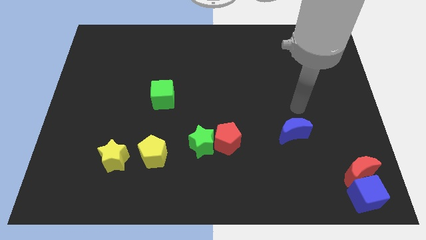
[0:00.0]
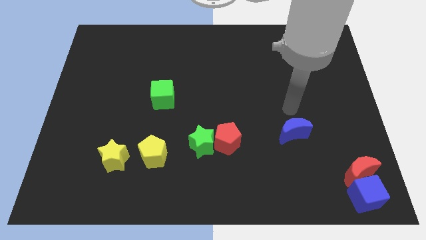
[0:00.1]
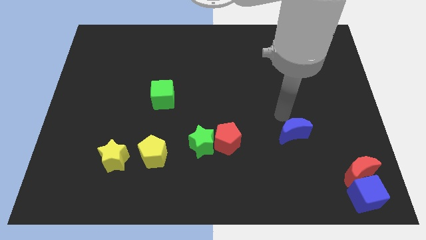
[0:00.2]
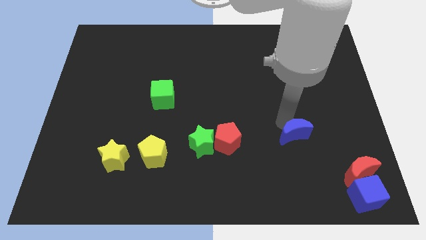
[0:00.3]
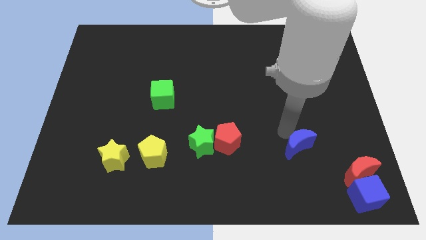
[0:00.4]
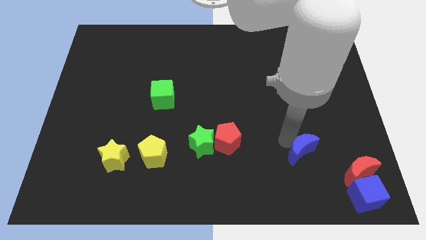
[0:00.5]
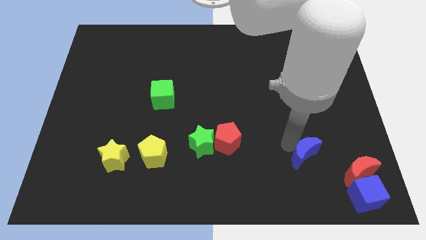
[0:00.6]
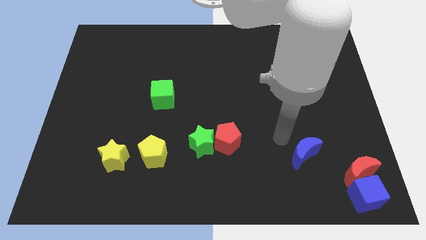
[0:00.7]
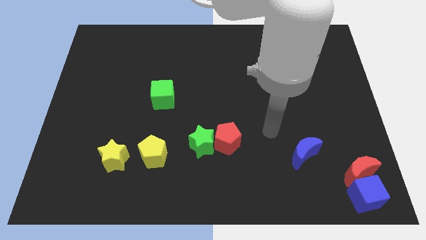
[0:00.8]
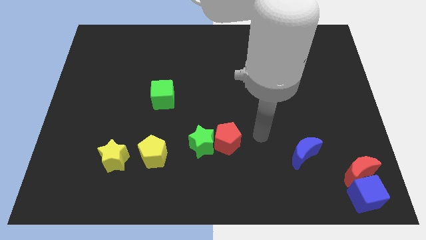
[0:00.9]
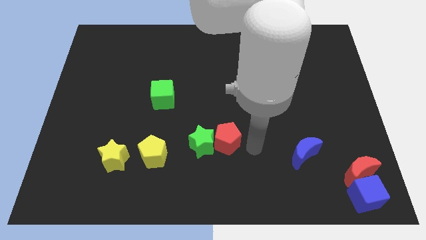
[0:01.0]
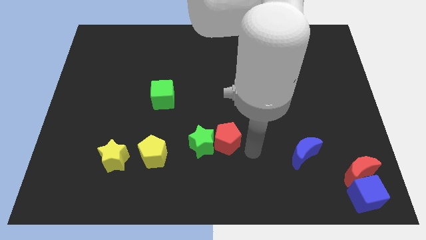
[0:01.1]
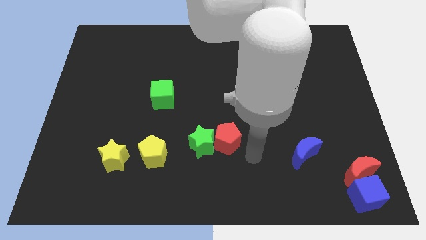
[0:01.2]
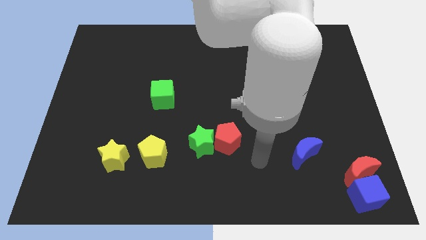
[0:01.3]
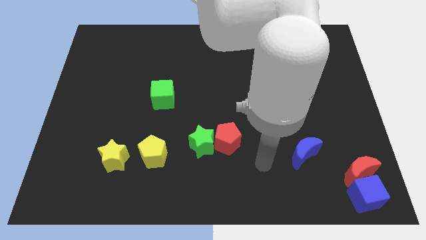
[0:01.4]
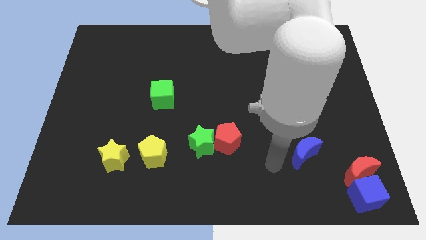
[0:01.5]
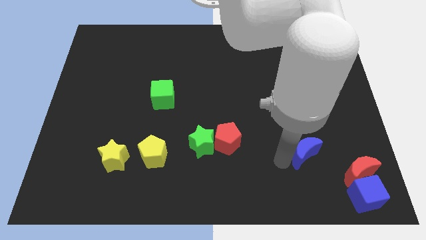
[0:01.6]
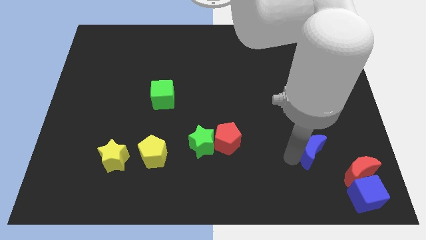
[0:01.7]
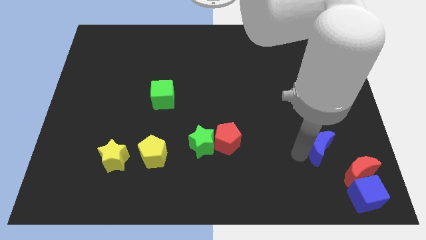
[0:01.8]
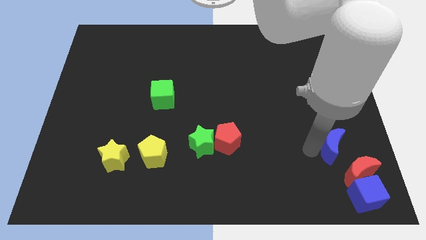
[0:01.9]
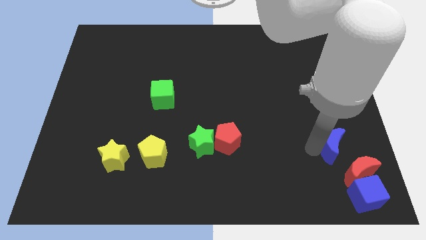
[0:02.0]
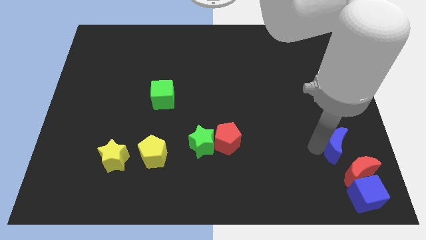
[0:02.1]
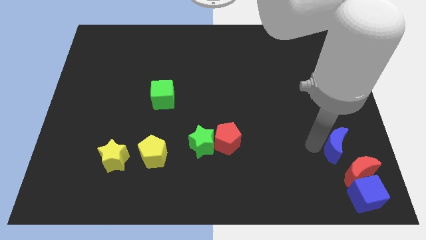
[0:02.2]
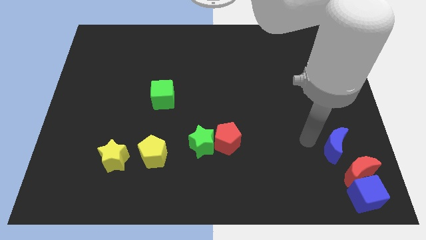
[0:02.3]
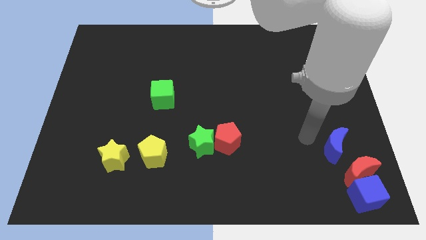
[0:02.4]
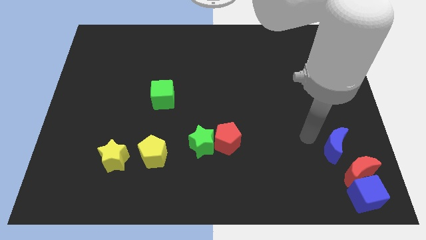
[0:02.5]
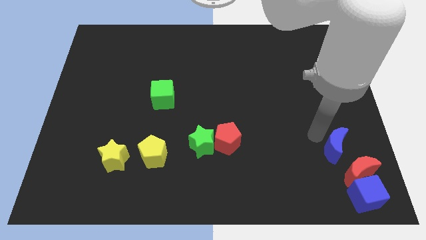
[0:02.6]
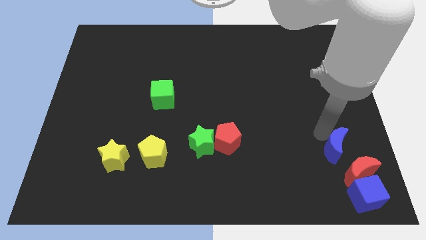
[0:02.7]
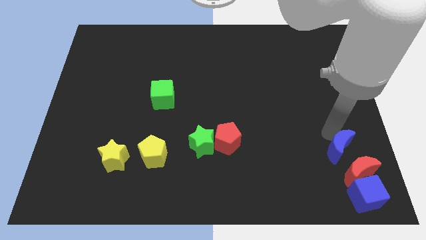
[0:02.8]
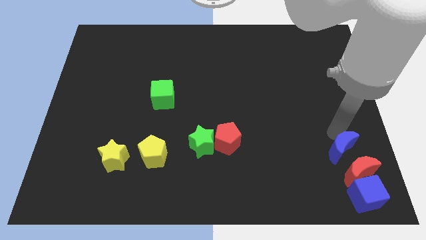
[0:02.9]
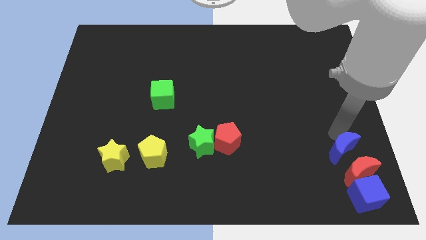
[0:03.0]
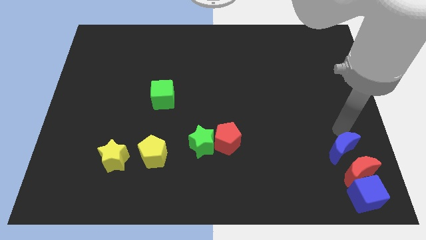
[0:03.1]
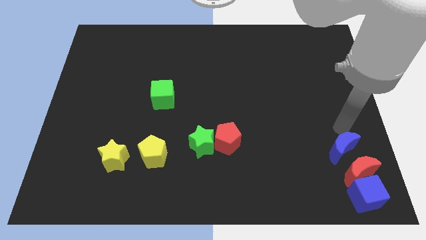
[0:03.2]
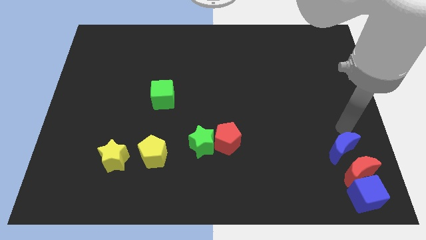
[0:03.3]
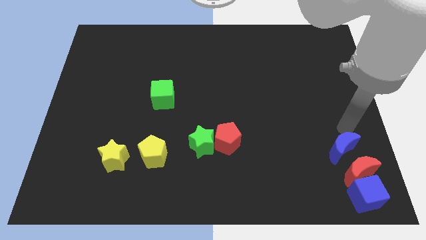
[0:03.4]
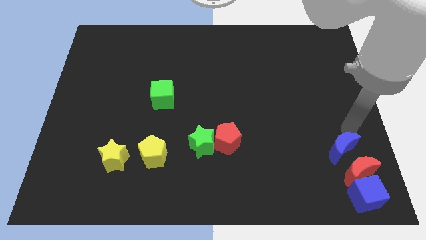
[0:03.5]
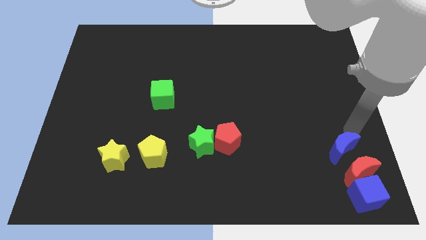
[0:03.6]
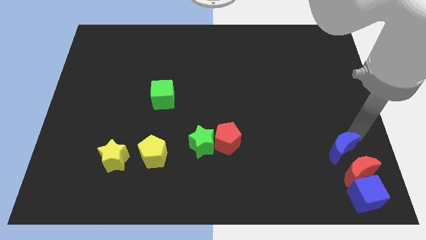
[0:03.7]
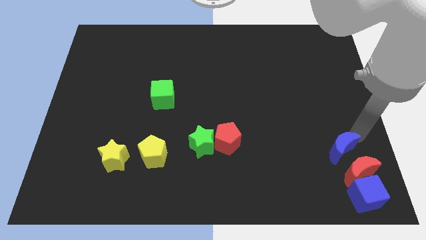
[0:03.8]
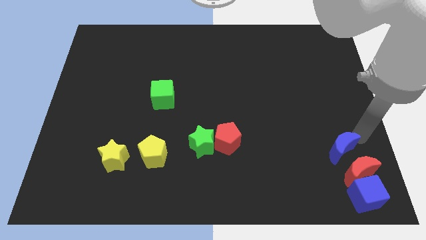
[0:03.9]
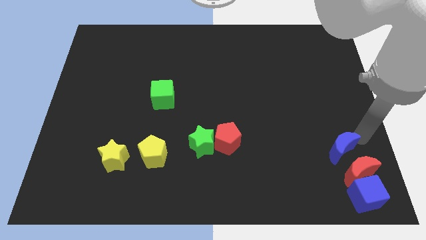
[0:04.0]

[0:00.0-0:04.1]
move the blue moon above the red moon

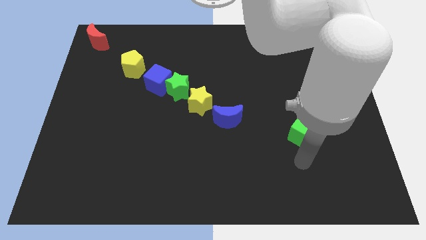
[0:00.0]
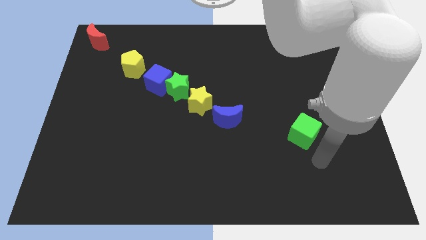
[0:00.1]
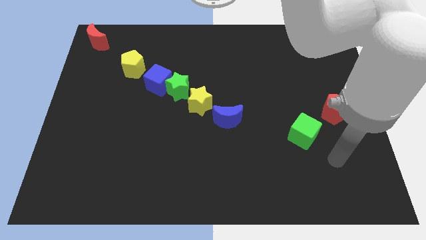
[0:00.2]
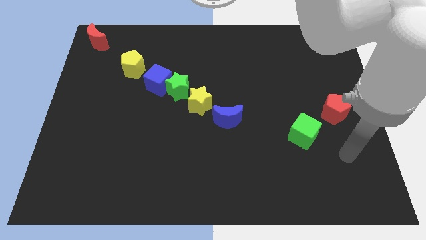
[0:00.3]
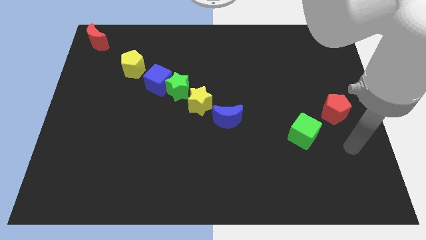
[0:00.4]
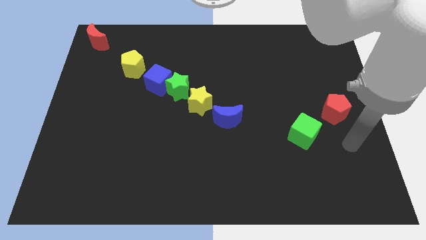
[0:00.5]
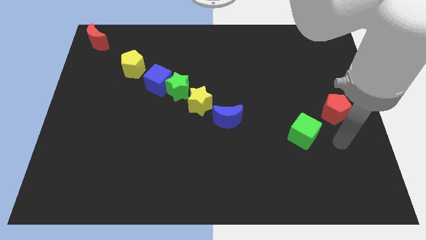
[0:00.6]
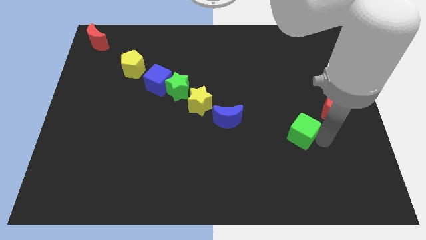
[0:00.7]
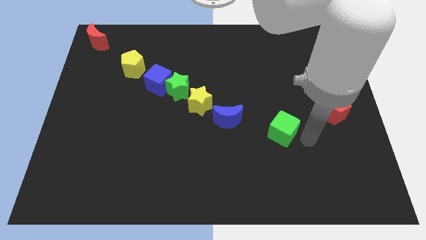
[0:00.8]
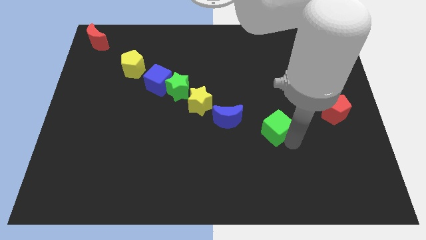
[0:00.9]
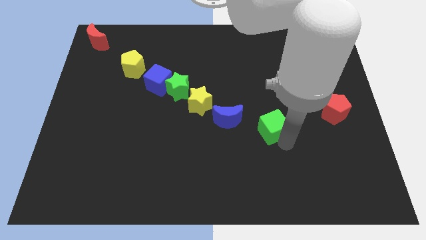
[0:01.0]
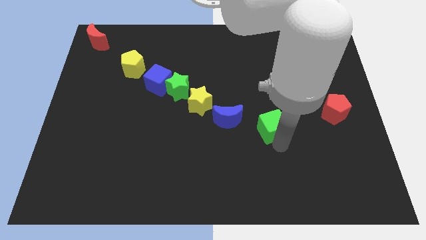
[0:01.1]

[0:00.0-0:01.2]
move the green cube diagonally below the blue moon

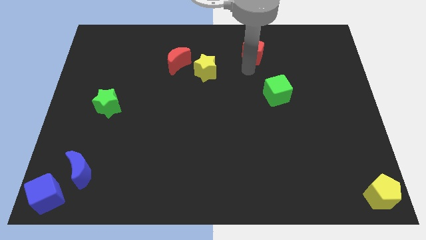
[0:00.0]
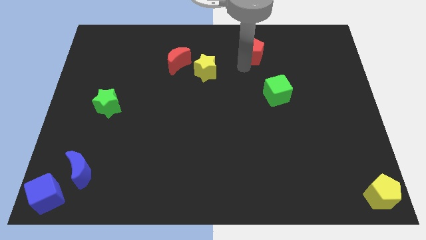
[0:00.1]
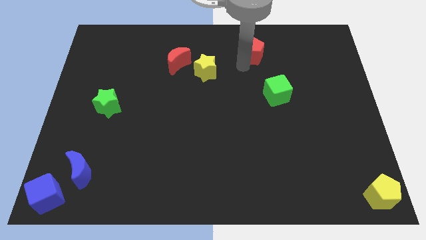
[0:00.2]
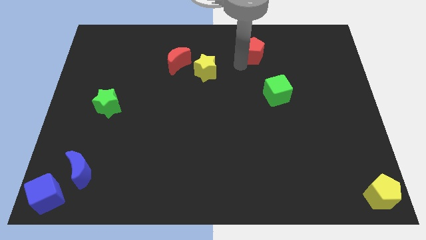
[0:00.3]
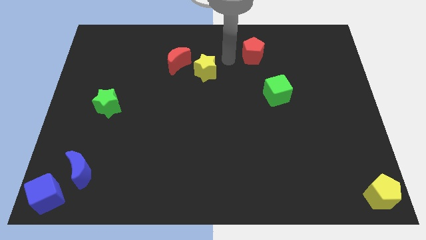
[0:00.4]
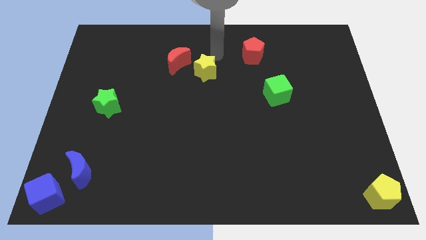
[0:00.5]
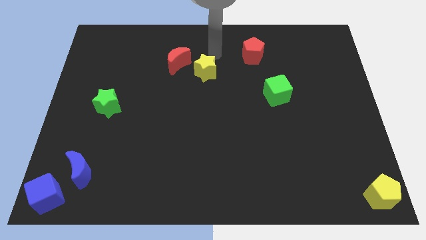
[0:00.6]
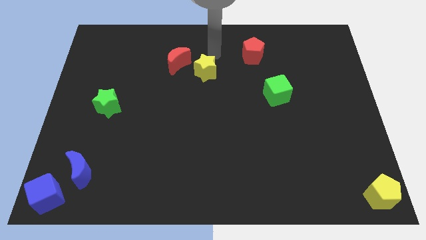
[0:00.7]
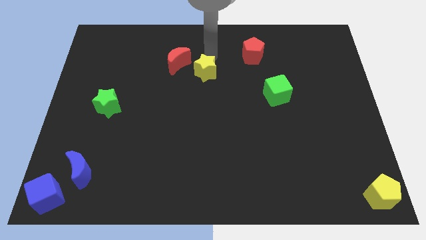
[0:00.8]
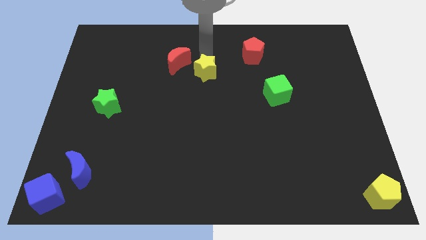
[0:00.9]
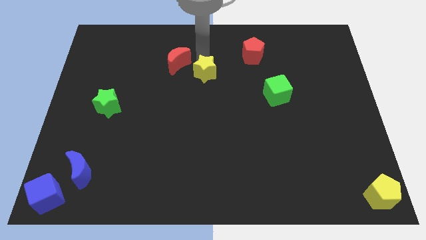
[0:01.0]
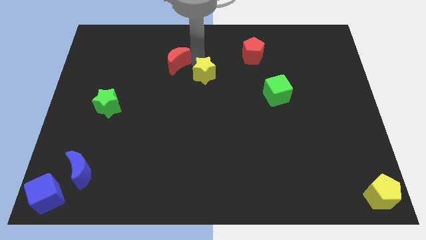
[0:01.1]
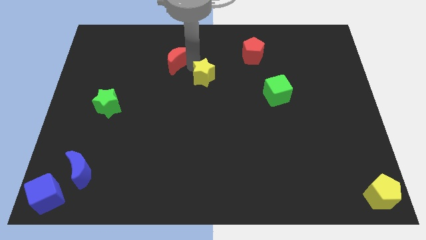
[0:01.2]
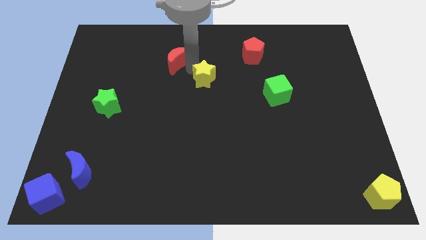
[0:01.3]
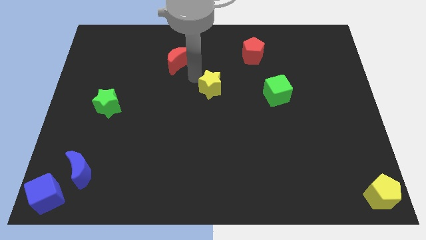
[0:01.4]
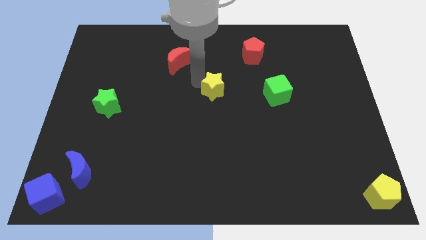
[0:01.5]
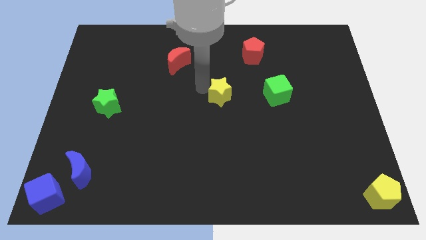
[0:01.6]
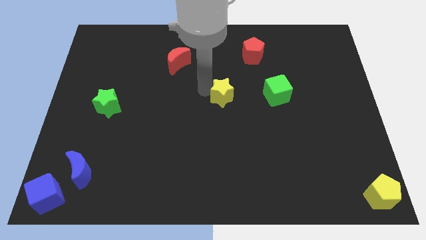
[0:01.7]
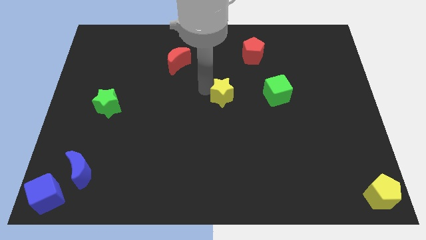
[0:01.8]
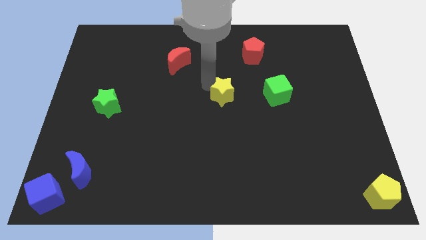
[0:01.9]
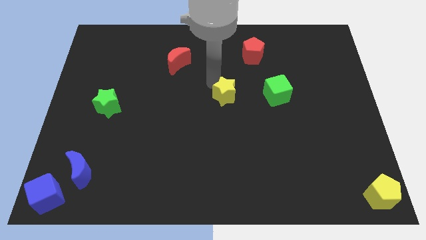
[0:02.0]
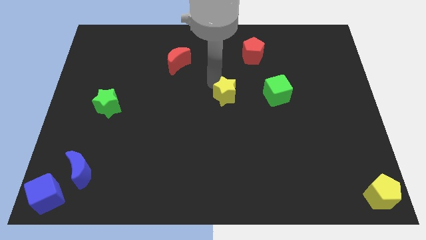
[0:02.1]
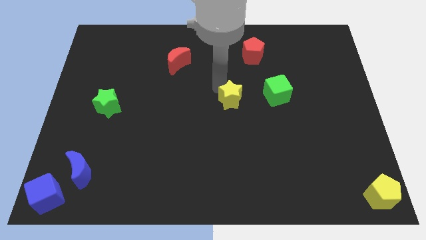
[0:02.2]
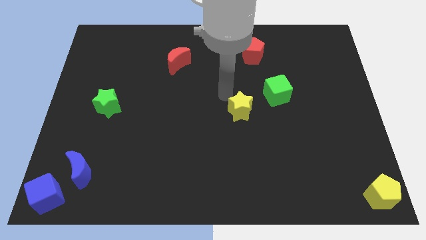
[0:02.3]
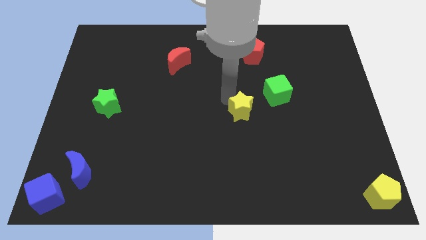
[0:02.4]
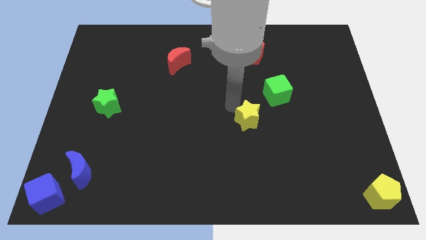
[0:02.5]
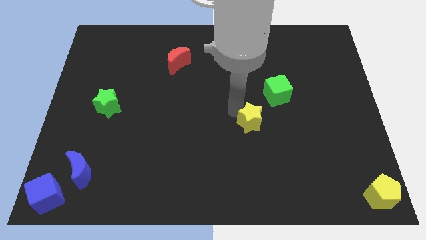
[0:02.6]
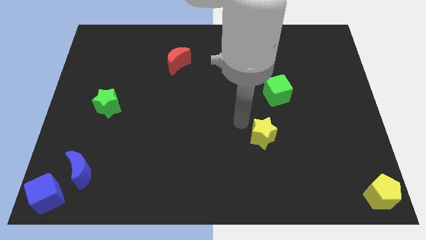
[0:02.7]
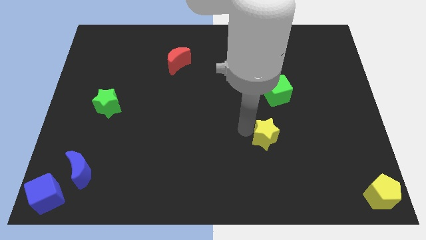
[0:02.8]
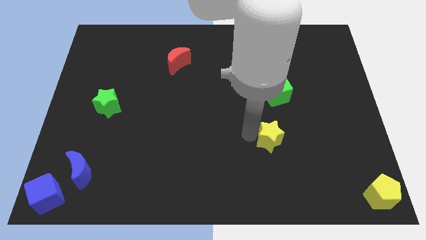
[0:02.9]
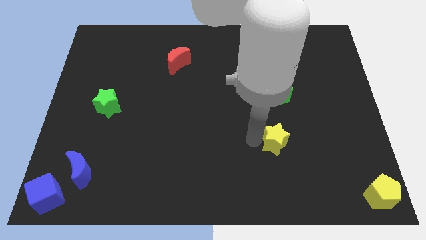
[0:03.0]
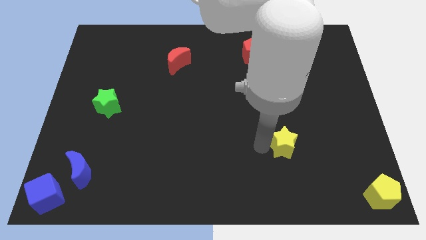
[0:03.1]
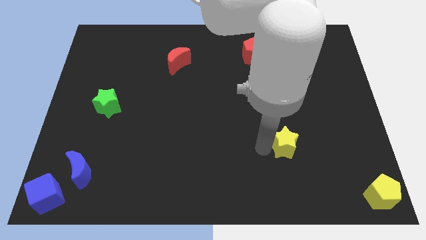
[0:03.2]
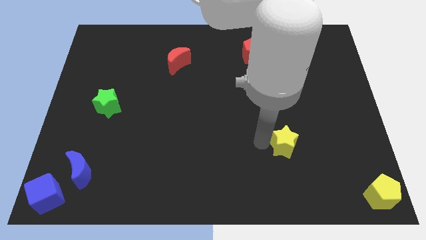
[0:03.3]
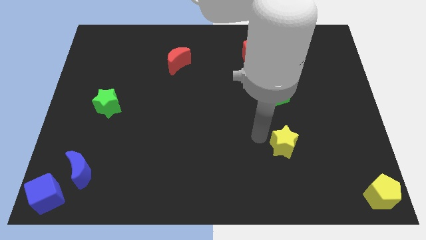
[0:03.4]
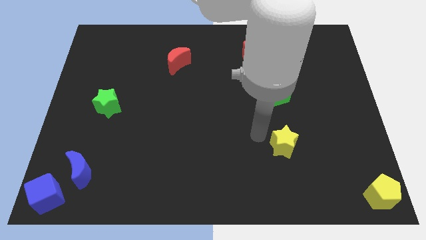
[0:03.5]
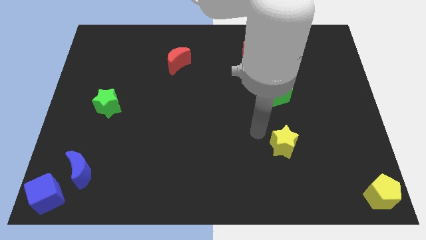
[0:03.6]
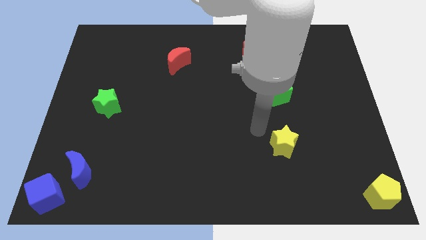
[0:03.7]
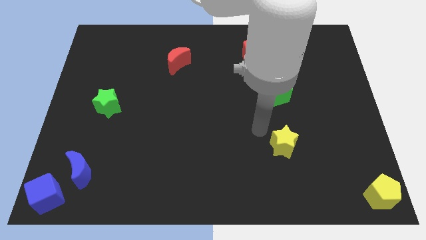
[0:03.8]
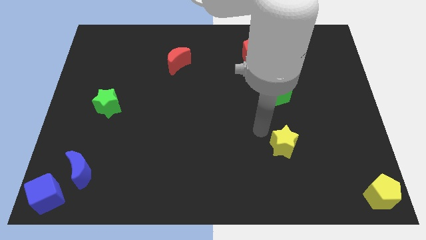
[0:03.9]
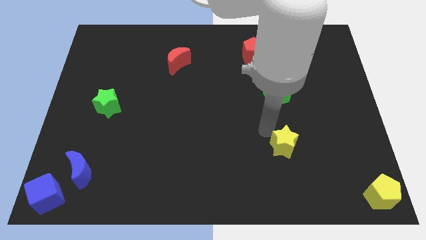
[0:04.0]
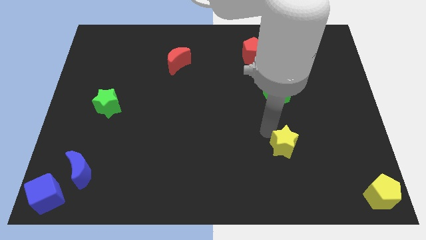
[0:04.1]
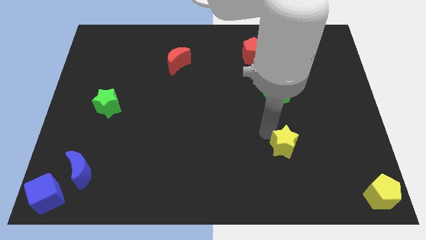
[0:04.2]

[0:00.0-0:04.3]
place the yellow star vertically below the gree cube
